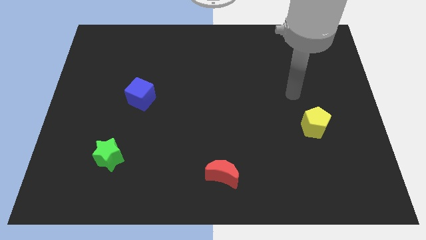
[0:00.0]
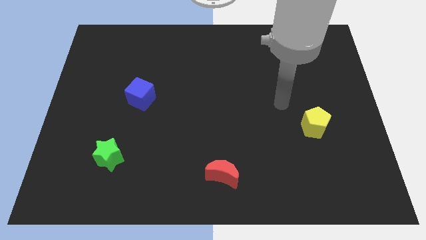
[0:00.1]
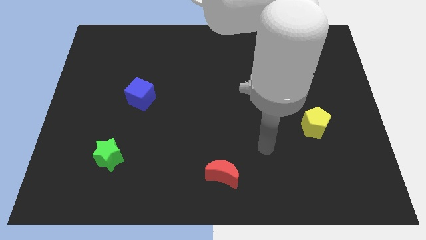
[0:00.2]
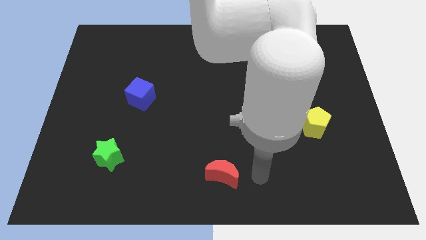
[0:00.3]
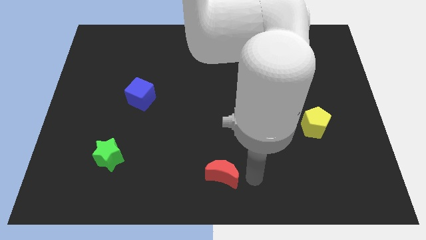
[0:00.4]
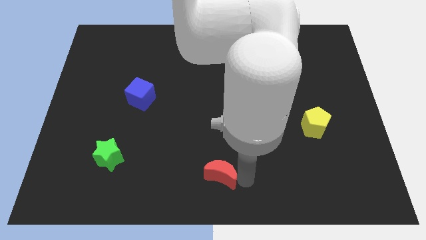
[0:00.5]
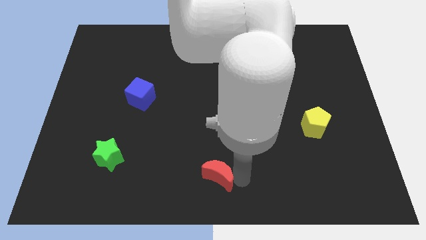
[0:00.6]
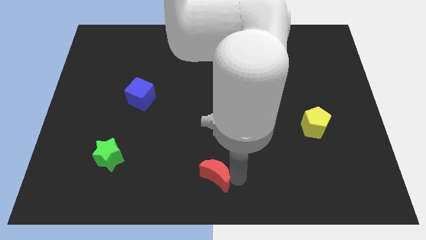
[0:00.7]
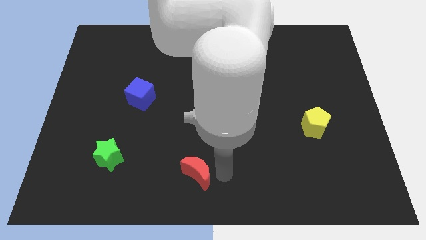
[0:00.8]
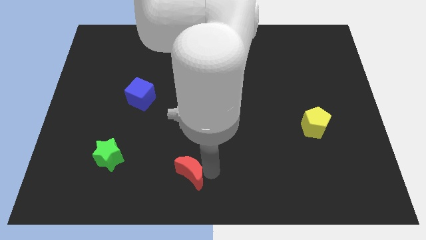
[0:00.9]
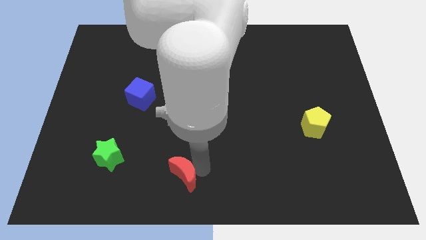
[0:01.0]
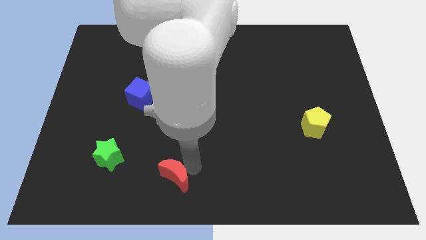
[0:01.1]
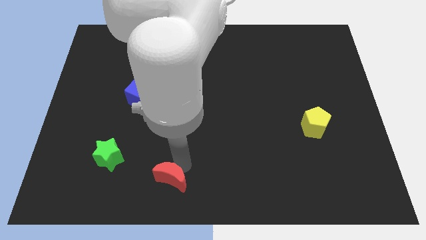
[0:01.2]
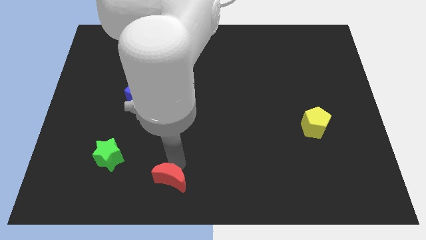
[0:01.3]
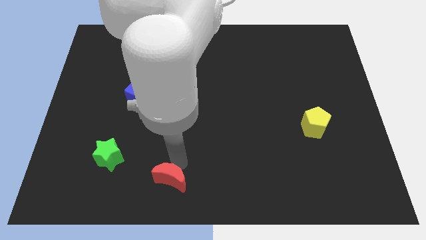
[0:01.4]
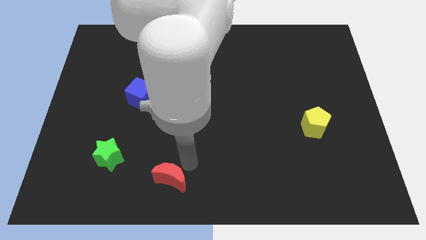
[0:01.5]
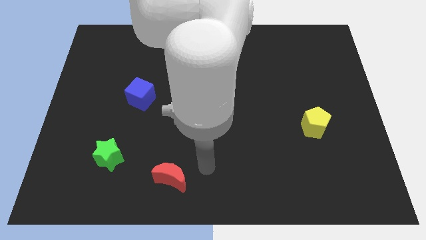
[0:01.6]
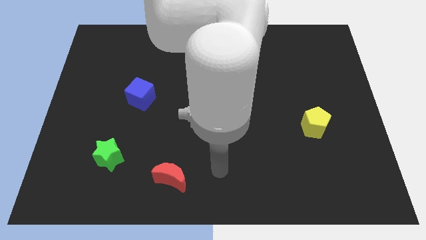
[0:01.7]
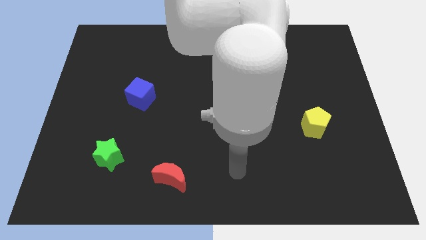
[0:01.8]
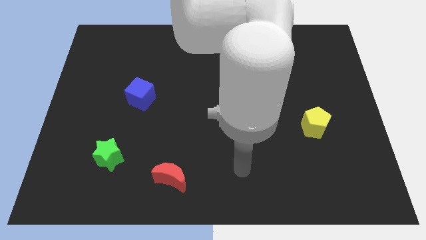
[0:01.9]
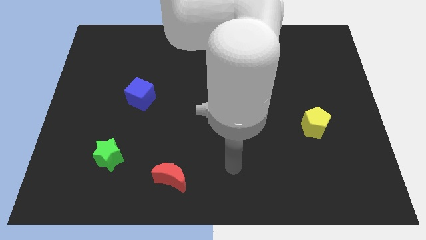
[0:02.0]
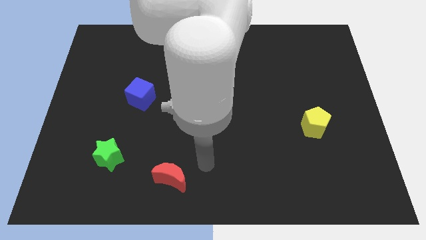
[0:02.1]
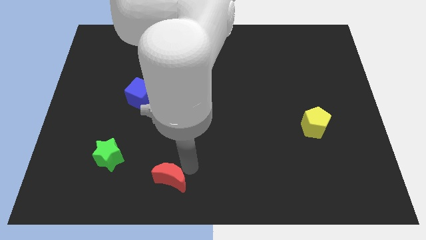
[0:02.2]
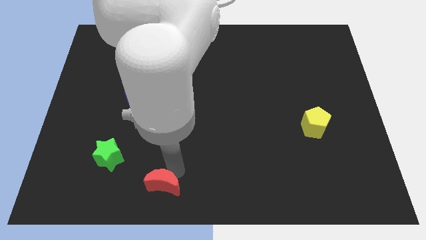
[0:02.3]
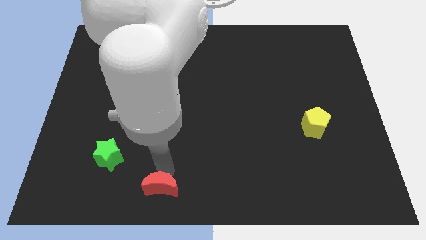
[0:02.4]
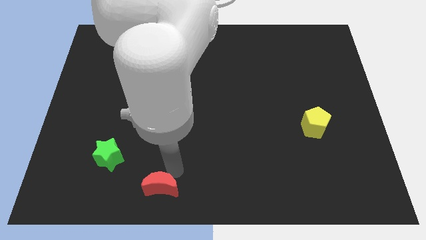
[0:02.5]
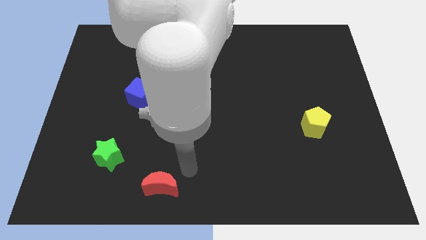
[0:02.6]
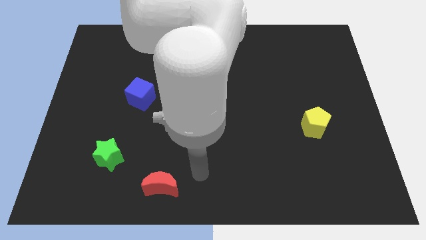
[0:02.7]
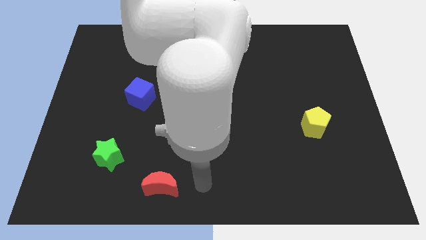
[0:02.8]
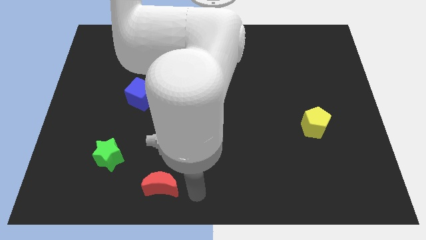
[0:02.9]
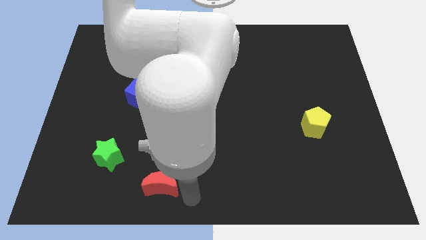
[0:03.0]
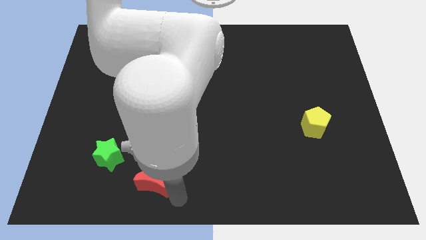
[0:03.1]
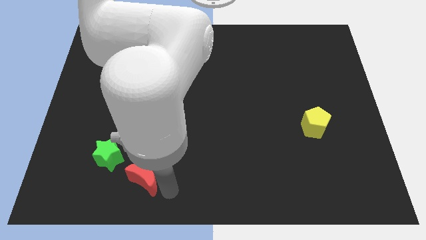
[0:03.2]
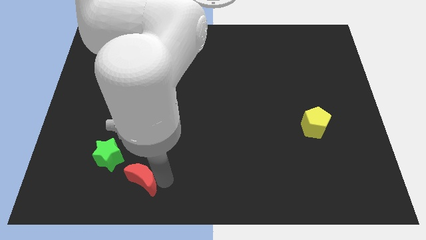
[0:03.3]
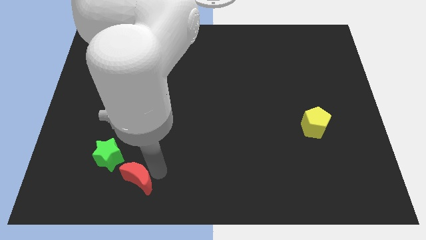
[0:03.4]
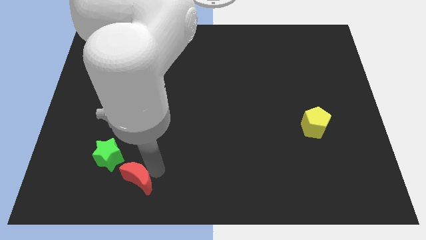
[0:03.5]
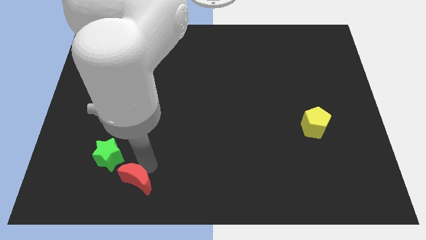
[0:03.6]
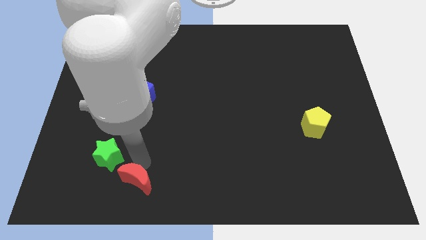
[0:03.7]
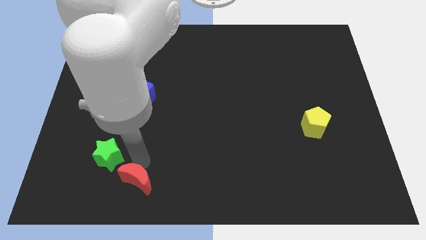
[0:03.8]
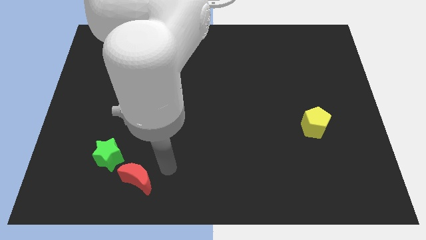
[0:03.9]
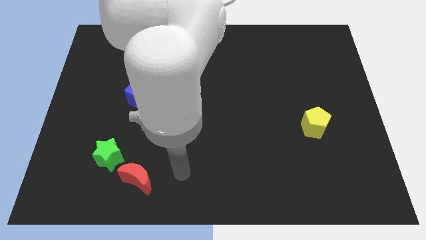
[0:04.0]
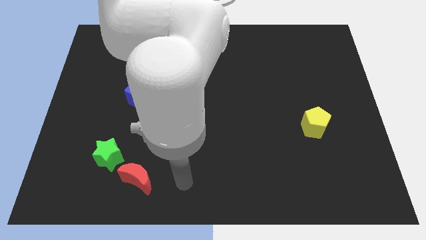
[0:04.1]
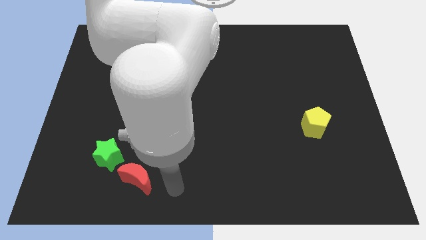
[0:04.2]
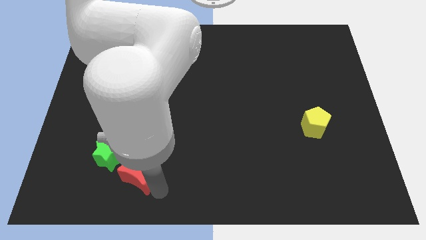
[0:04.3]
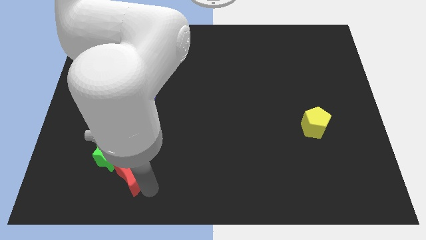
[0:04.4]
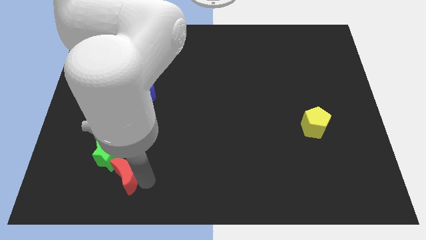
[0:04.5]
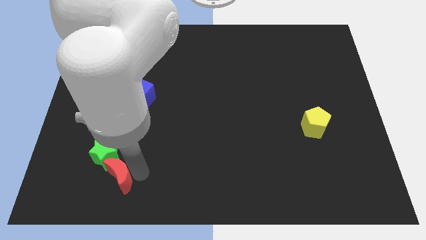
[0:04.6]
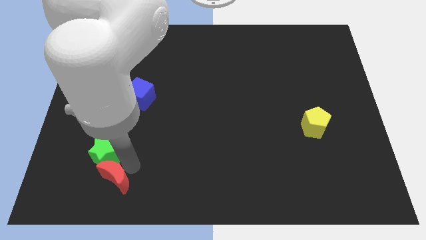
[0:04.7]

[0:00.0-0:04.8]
push the moon next to the star

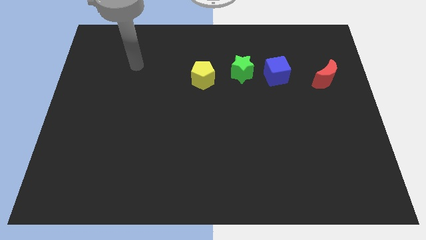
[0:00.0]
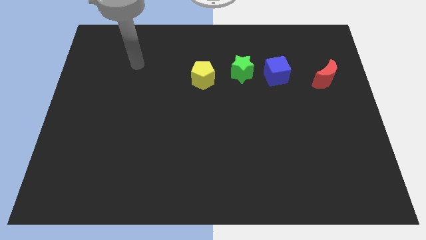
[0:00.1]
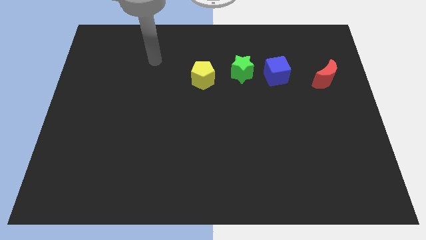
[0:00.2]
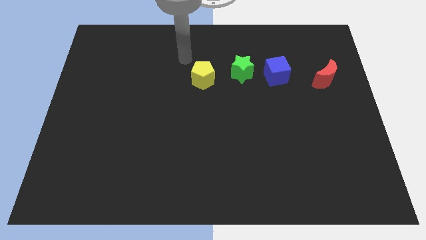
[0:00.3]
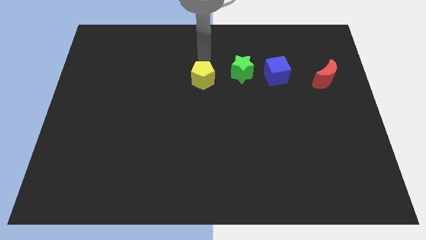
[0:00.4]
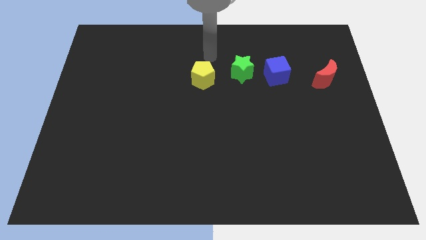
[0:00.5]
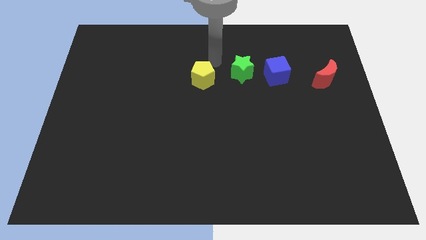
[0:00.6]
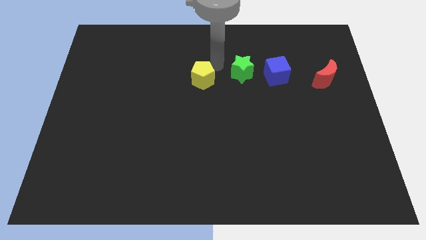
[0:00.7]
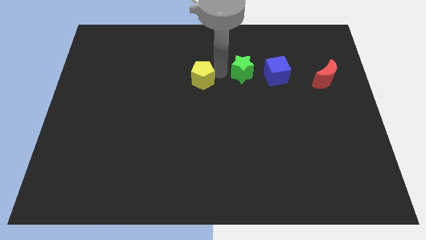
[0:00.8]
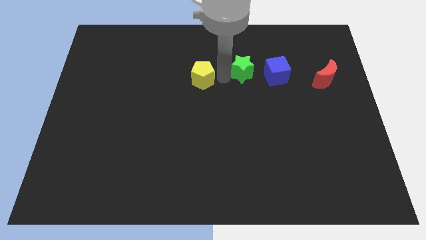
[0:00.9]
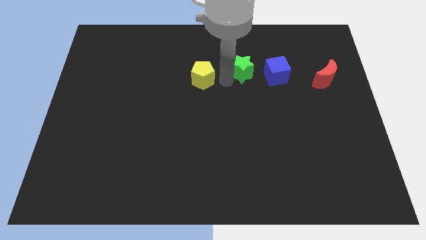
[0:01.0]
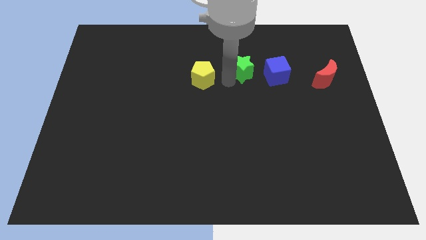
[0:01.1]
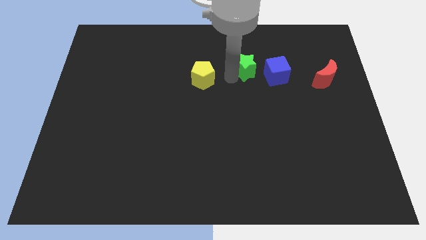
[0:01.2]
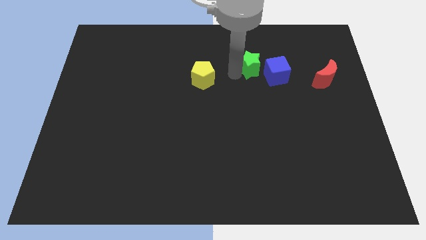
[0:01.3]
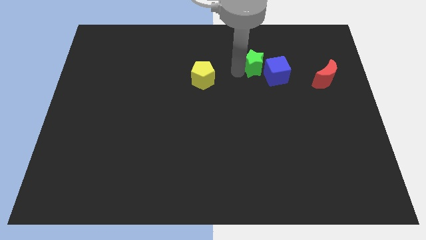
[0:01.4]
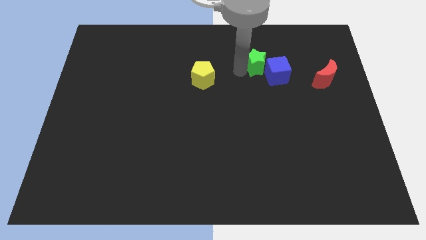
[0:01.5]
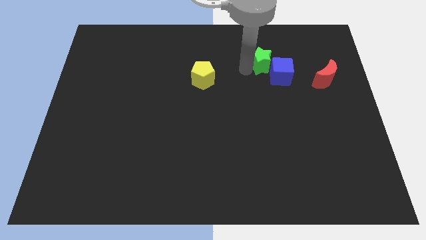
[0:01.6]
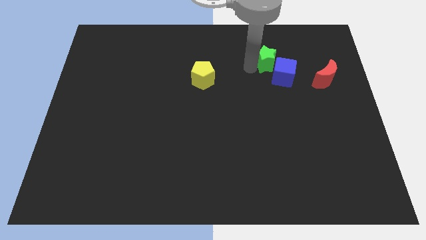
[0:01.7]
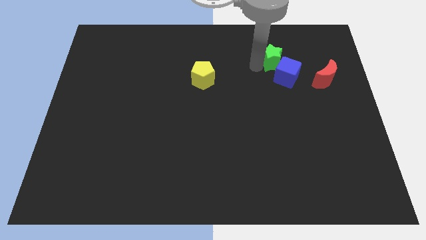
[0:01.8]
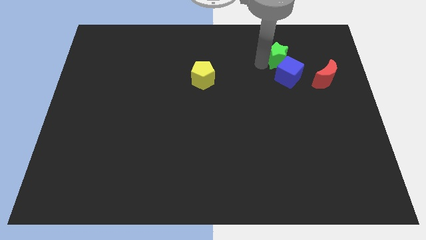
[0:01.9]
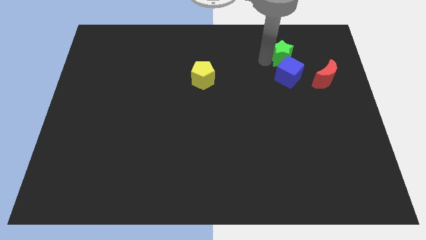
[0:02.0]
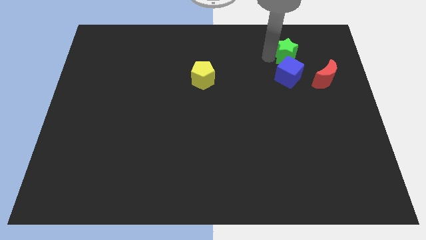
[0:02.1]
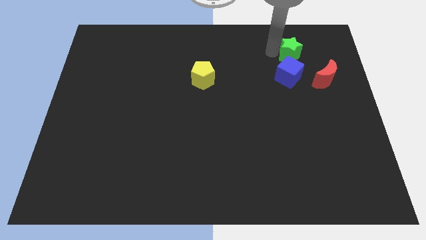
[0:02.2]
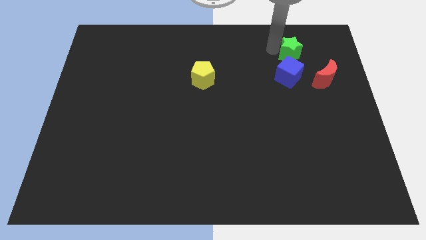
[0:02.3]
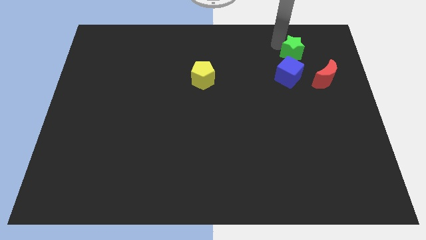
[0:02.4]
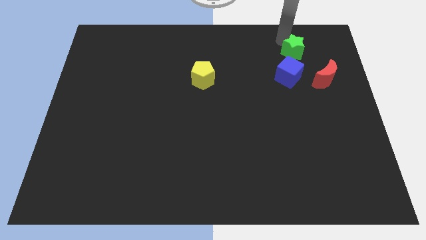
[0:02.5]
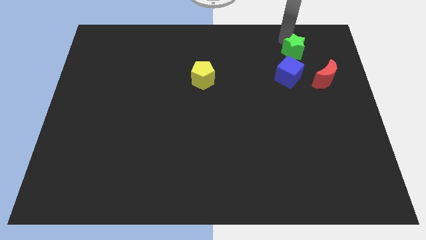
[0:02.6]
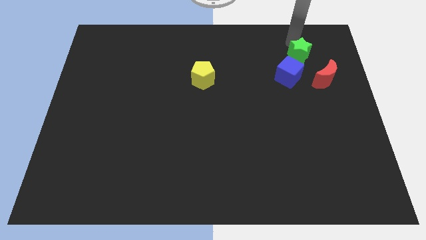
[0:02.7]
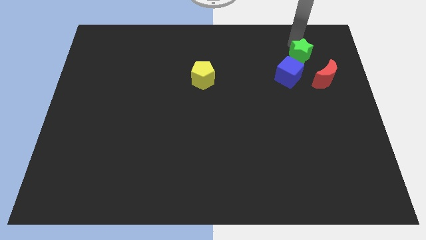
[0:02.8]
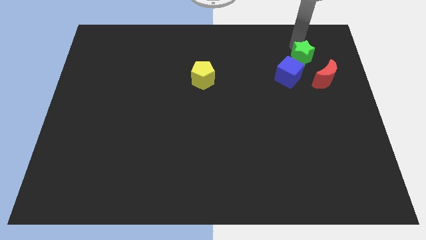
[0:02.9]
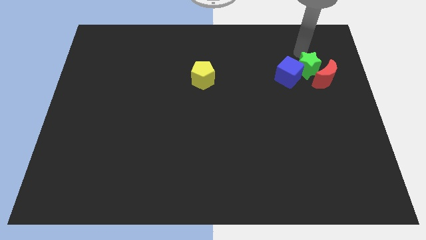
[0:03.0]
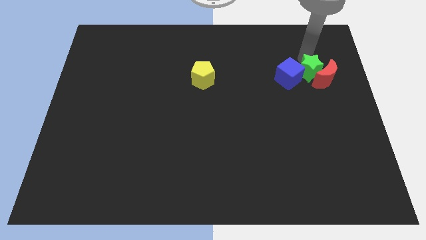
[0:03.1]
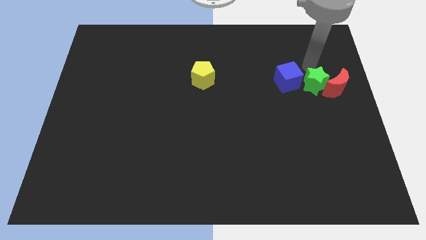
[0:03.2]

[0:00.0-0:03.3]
move the green block close to the moon
